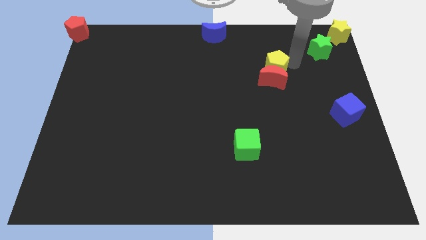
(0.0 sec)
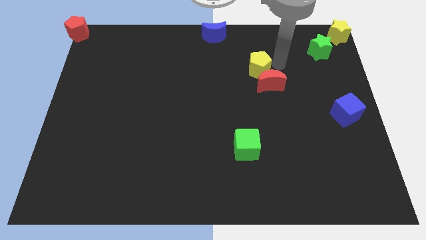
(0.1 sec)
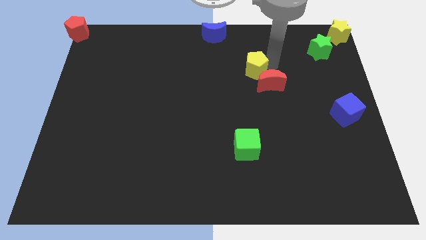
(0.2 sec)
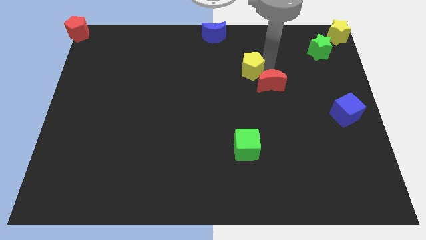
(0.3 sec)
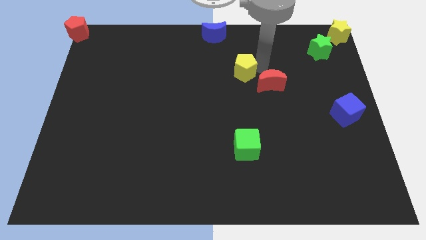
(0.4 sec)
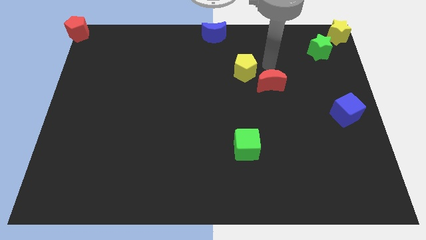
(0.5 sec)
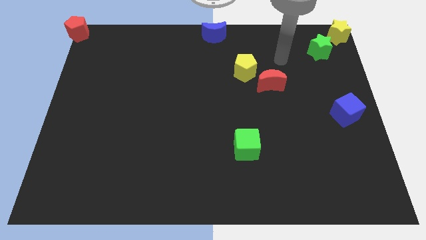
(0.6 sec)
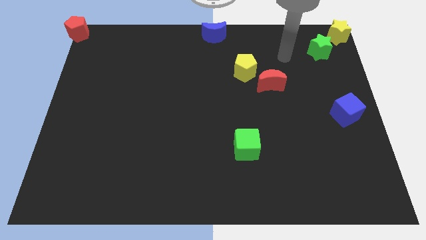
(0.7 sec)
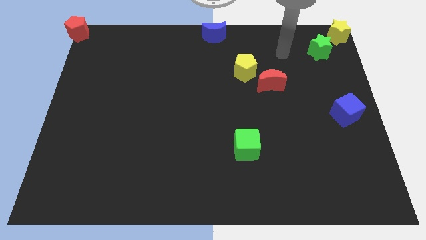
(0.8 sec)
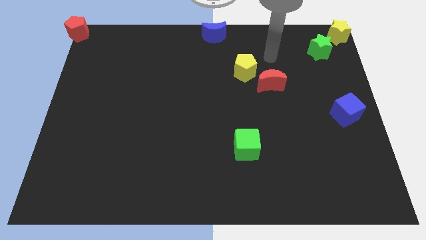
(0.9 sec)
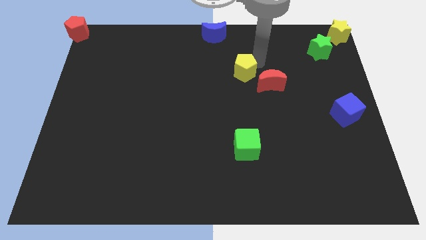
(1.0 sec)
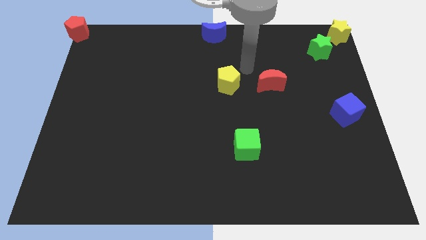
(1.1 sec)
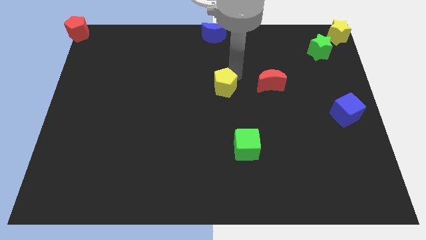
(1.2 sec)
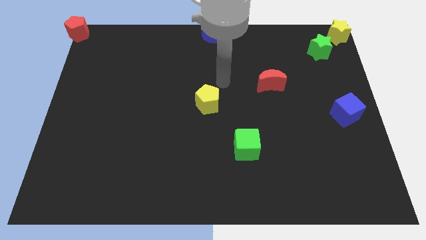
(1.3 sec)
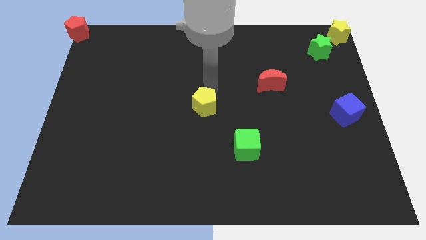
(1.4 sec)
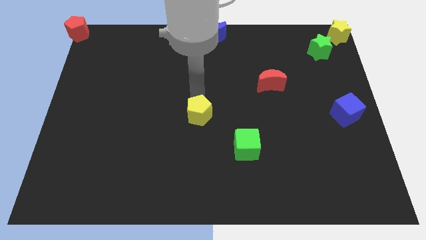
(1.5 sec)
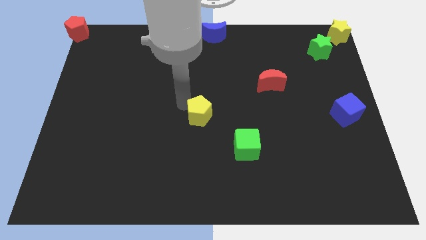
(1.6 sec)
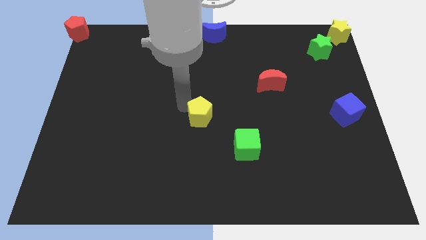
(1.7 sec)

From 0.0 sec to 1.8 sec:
apart yellow pentagon from red crescent

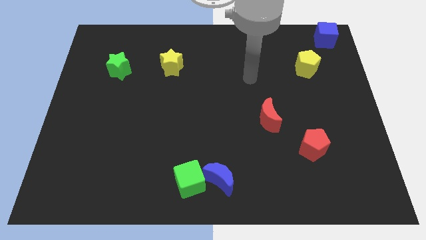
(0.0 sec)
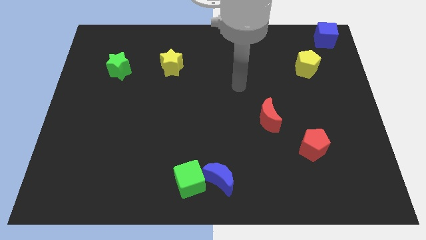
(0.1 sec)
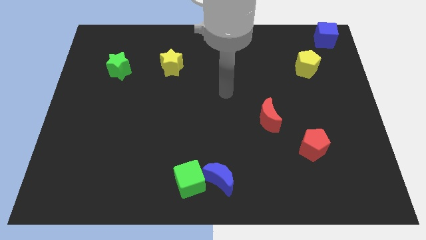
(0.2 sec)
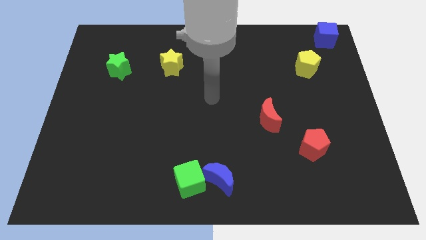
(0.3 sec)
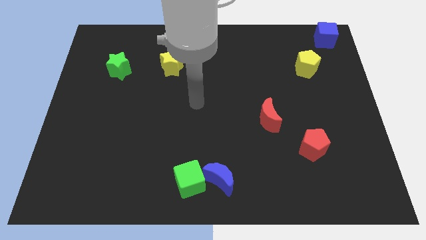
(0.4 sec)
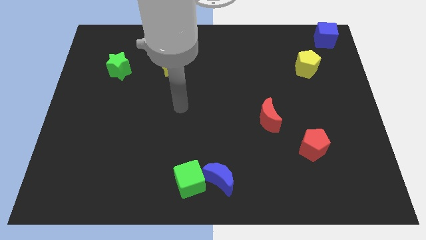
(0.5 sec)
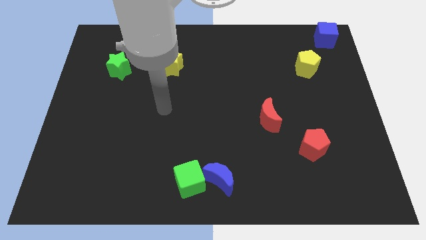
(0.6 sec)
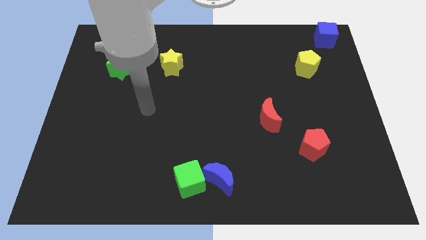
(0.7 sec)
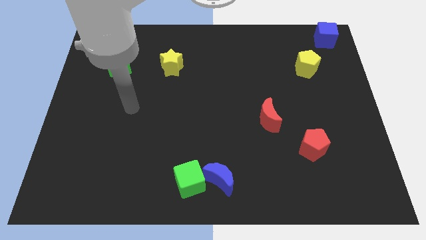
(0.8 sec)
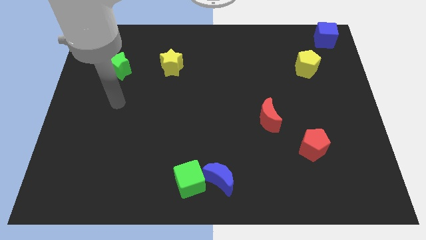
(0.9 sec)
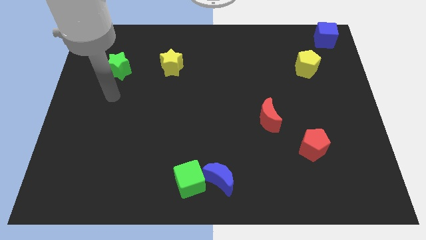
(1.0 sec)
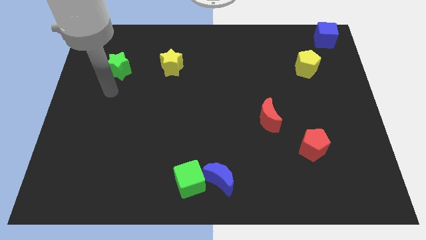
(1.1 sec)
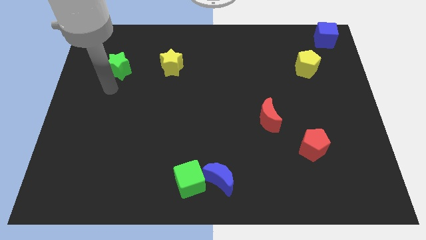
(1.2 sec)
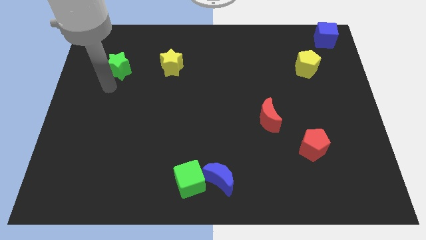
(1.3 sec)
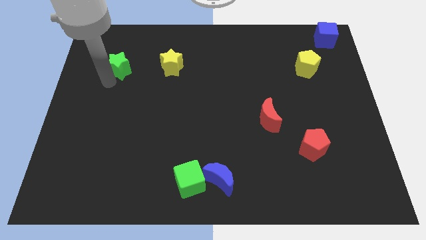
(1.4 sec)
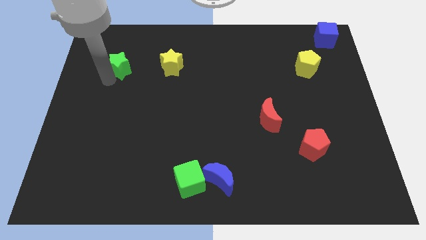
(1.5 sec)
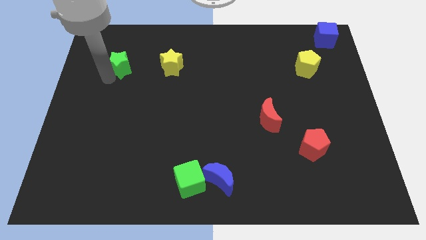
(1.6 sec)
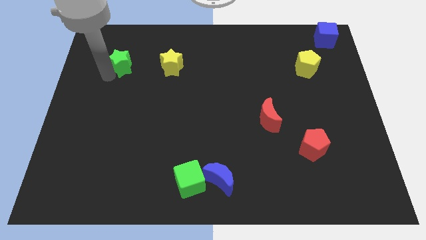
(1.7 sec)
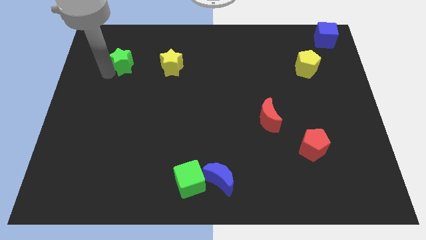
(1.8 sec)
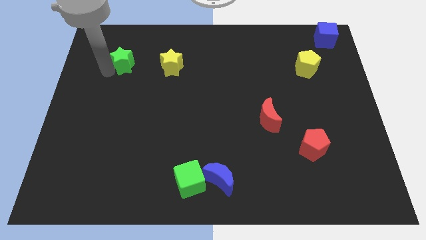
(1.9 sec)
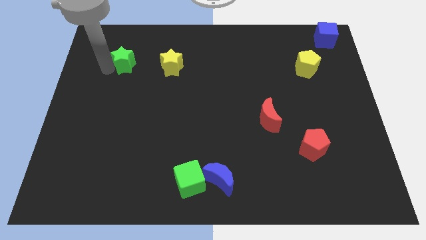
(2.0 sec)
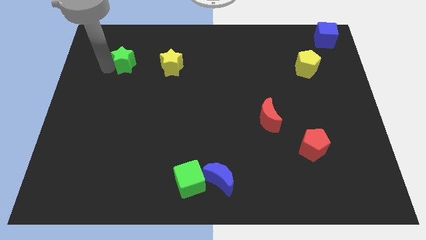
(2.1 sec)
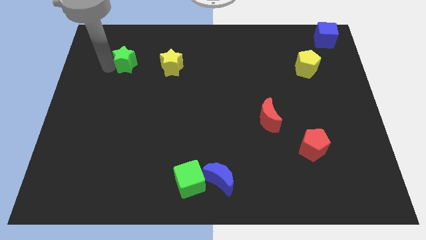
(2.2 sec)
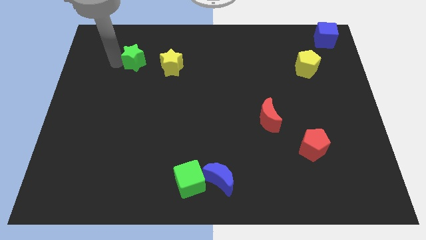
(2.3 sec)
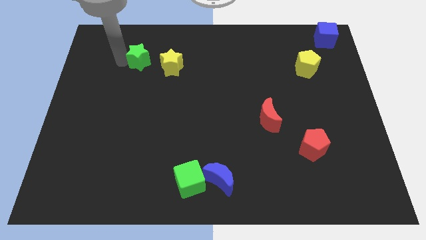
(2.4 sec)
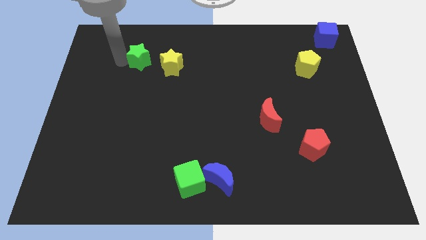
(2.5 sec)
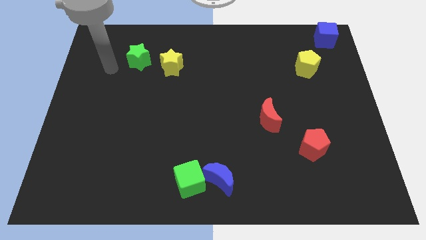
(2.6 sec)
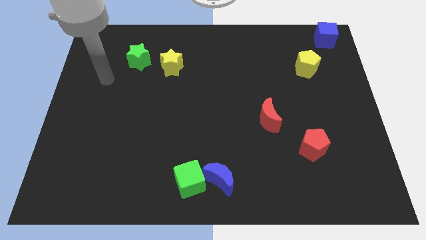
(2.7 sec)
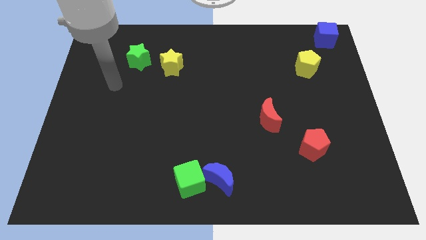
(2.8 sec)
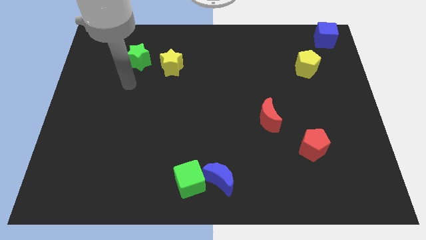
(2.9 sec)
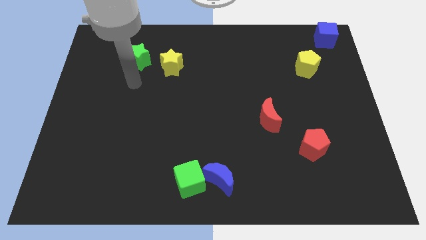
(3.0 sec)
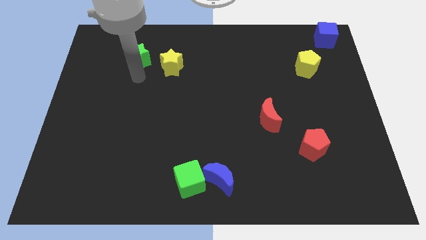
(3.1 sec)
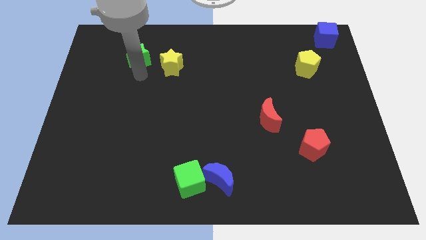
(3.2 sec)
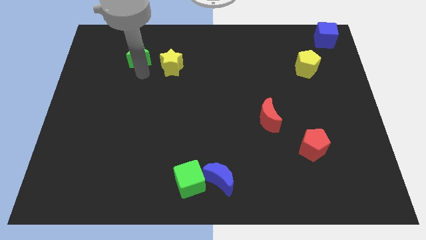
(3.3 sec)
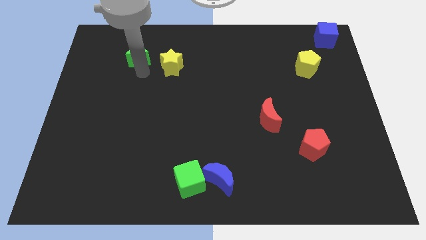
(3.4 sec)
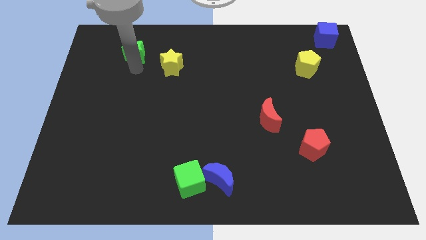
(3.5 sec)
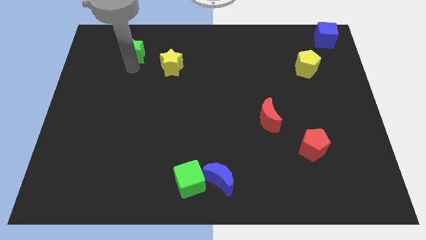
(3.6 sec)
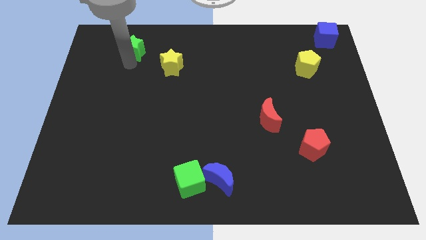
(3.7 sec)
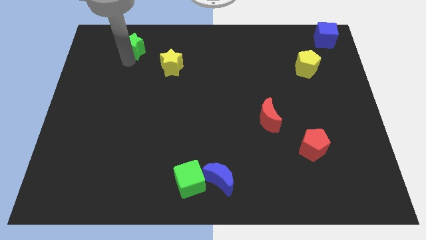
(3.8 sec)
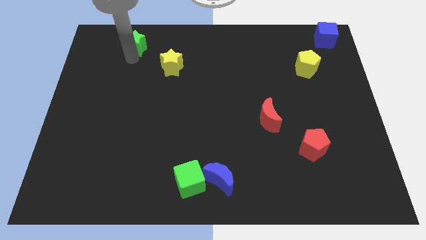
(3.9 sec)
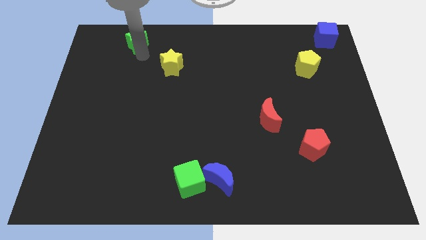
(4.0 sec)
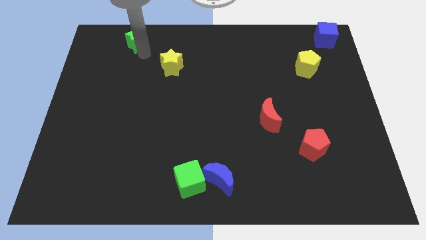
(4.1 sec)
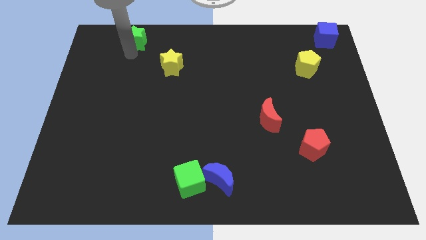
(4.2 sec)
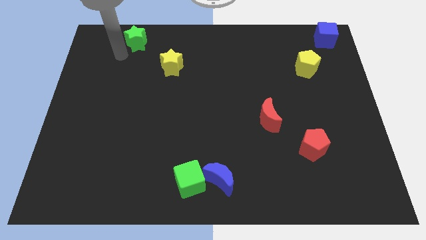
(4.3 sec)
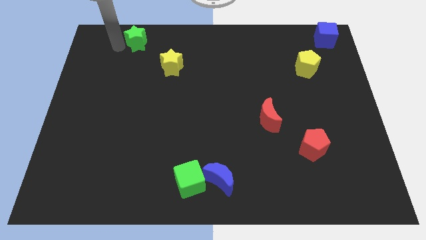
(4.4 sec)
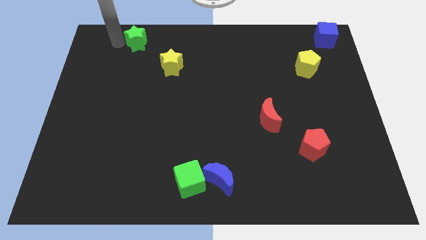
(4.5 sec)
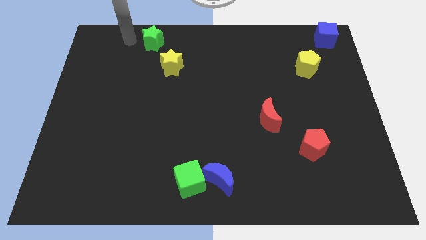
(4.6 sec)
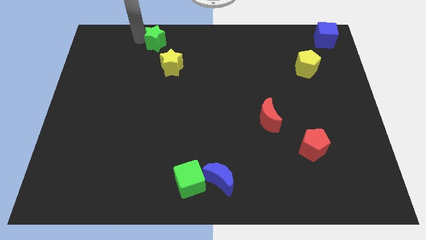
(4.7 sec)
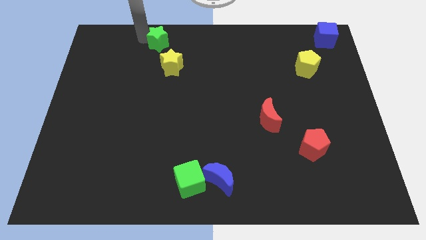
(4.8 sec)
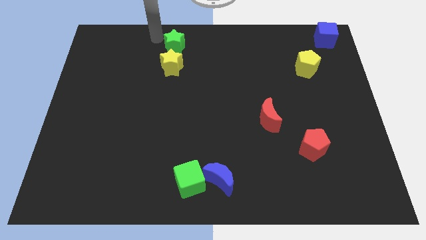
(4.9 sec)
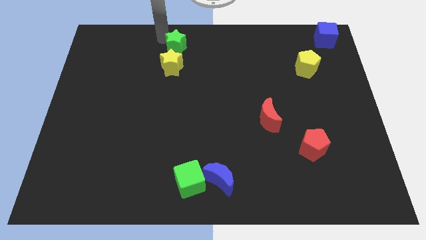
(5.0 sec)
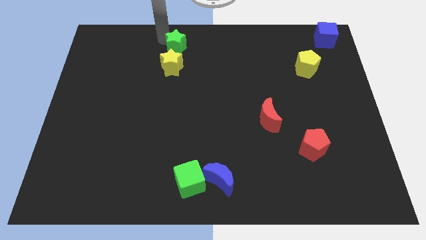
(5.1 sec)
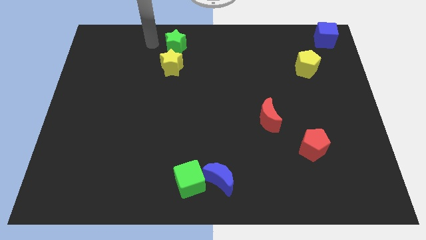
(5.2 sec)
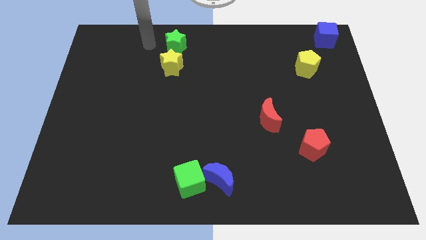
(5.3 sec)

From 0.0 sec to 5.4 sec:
move the green star above the yellow star

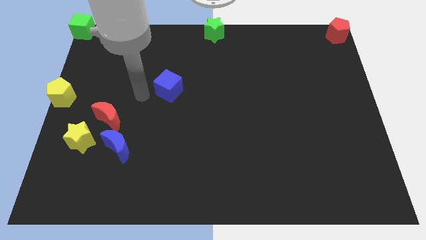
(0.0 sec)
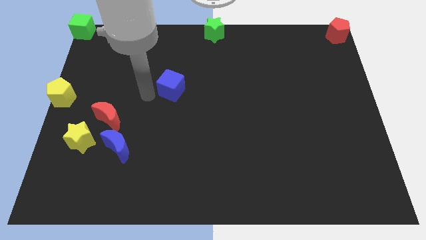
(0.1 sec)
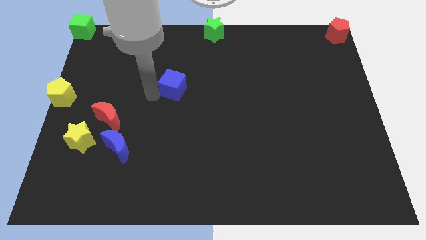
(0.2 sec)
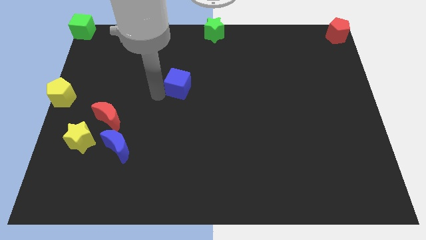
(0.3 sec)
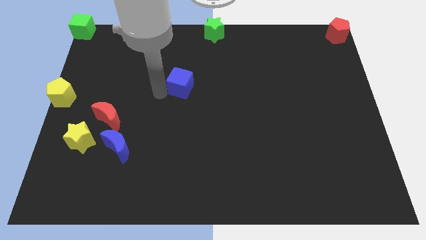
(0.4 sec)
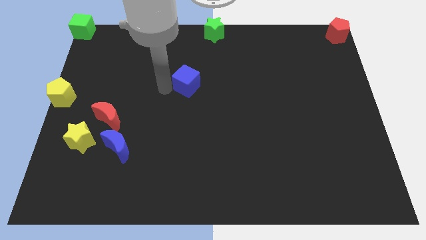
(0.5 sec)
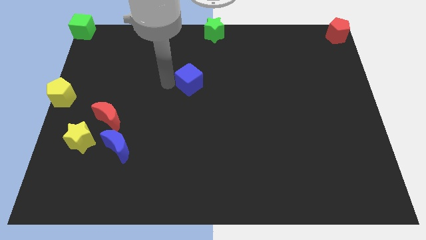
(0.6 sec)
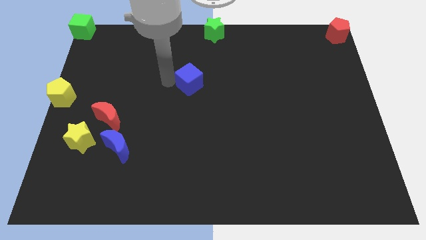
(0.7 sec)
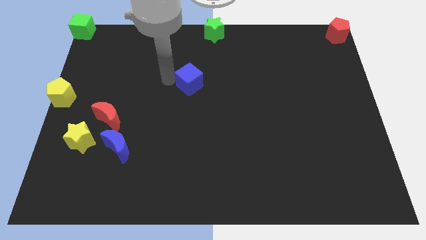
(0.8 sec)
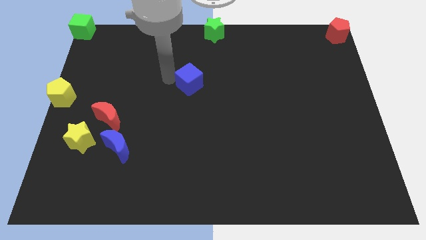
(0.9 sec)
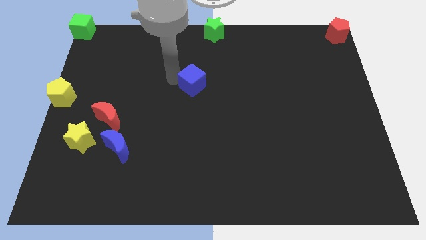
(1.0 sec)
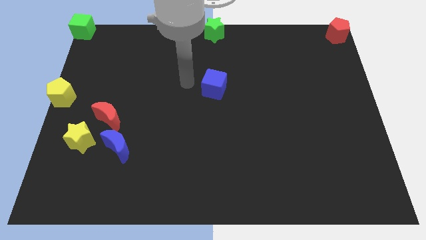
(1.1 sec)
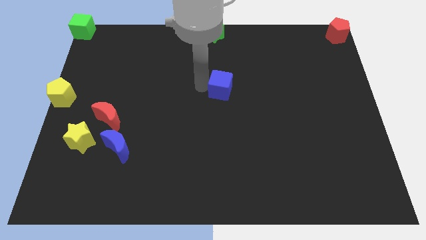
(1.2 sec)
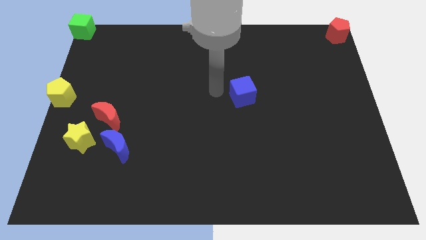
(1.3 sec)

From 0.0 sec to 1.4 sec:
push the blue cube to the center of the board

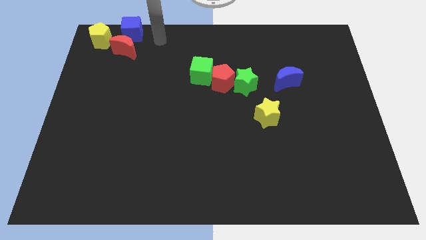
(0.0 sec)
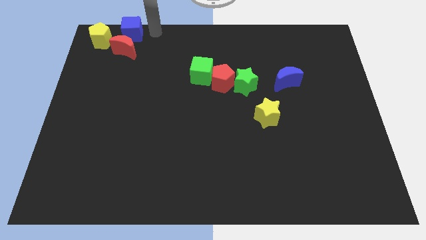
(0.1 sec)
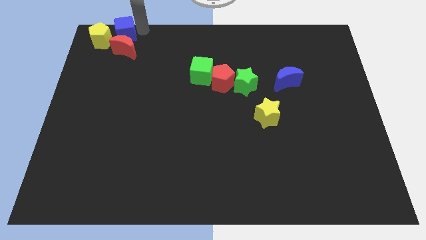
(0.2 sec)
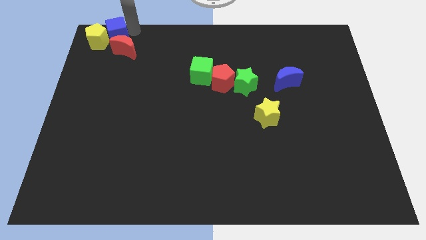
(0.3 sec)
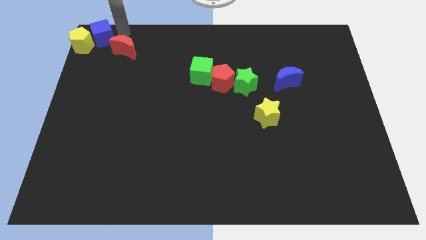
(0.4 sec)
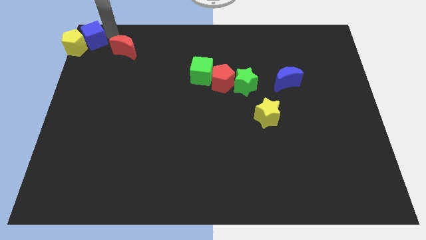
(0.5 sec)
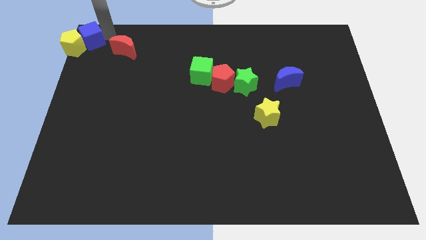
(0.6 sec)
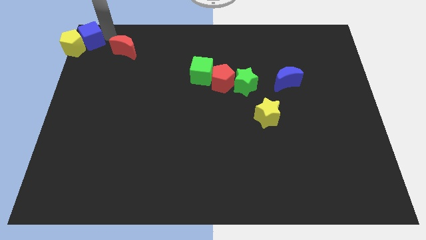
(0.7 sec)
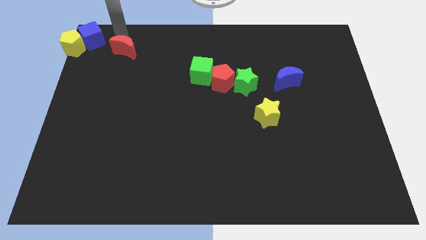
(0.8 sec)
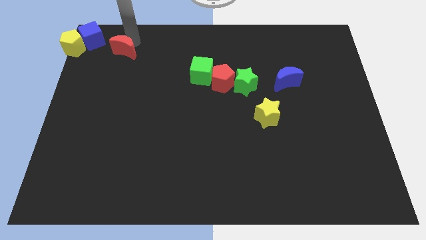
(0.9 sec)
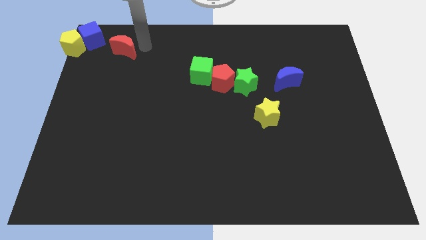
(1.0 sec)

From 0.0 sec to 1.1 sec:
push the yellow pentagon with the blue cube towards the top left of the board
